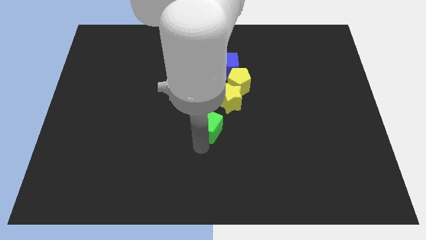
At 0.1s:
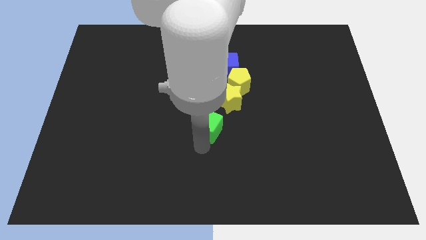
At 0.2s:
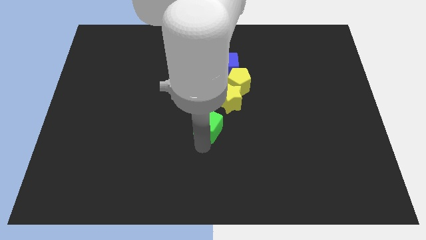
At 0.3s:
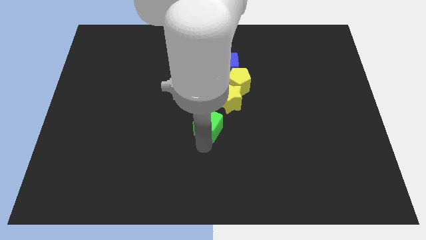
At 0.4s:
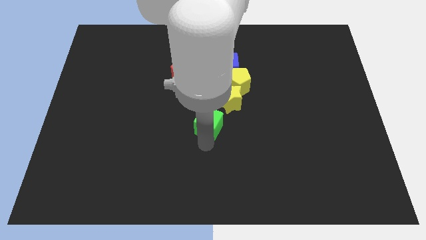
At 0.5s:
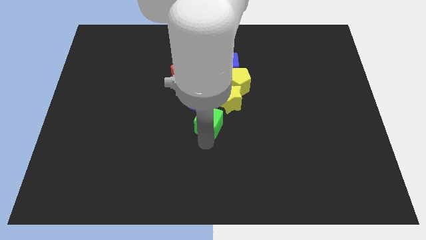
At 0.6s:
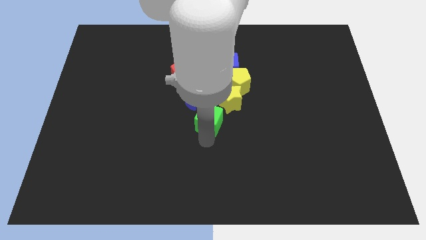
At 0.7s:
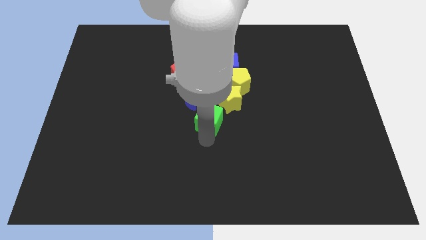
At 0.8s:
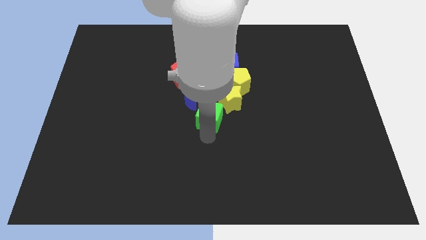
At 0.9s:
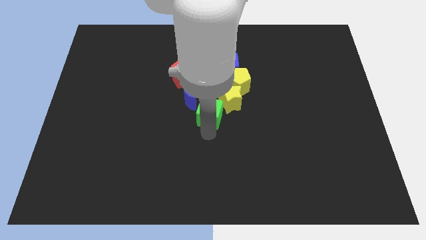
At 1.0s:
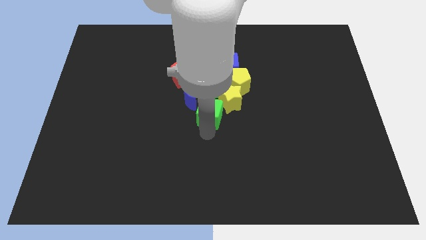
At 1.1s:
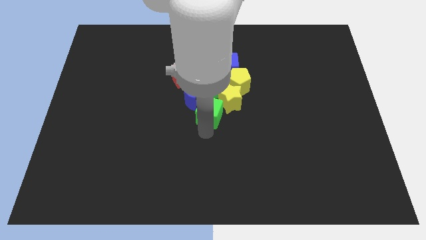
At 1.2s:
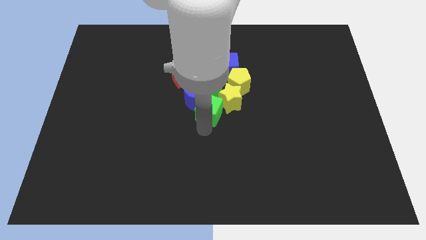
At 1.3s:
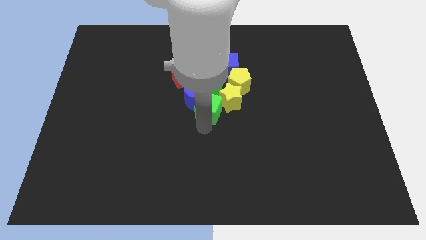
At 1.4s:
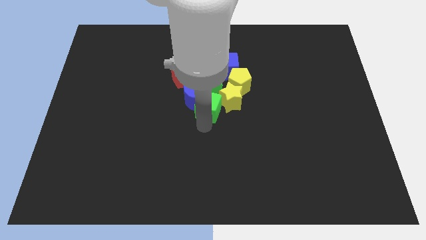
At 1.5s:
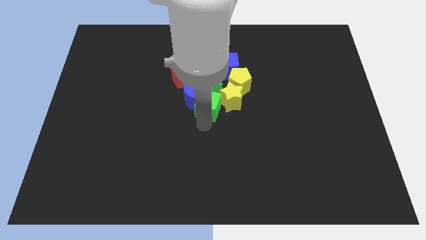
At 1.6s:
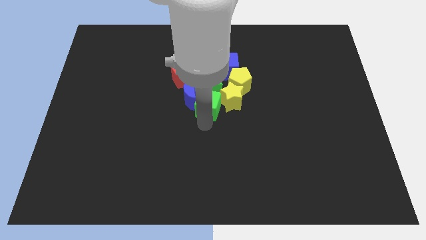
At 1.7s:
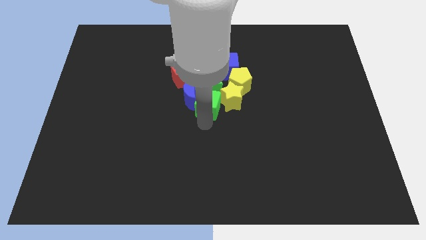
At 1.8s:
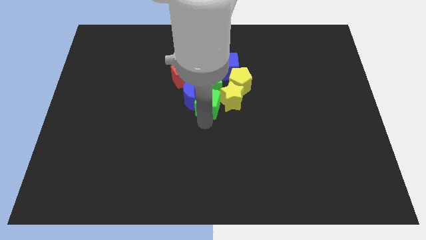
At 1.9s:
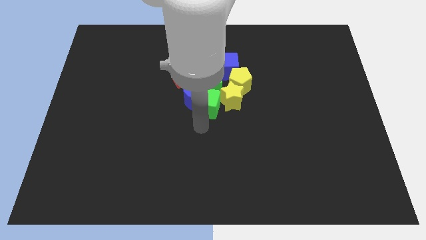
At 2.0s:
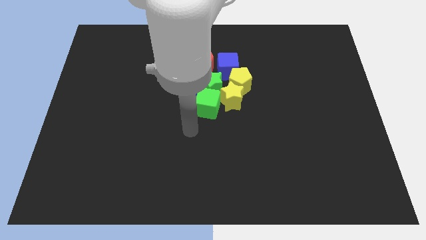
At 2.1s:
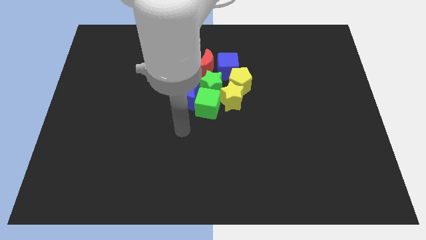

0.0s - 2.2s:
move the green cube into the bottom of the green star

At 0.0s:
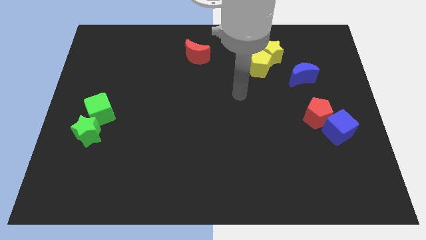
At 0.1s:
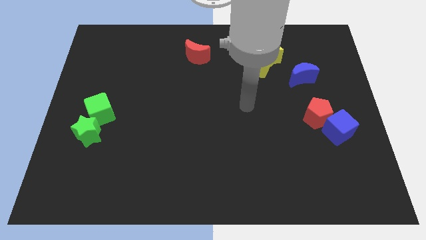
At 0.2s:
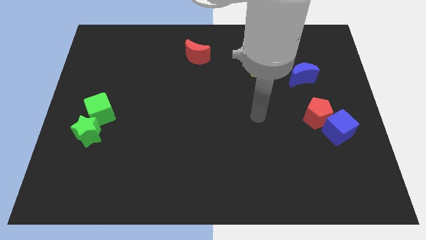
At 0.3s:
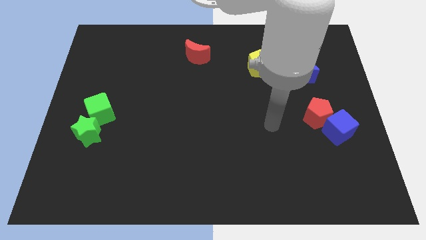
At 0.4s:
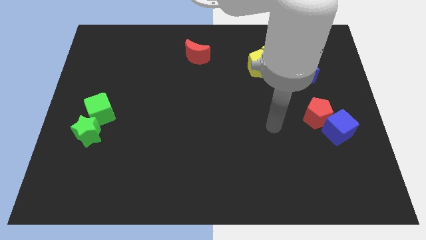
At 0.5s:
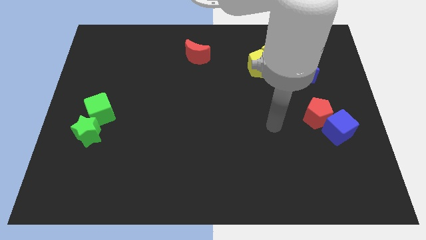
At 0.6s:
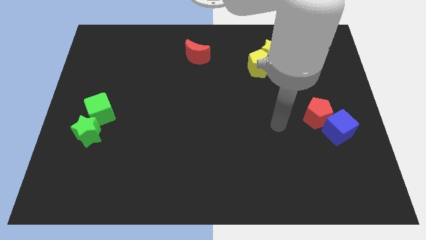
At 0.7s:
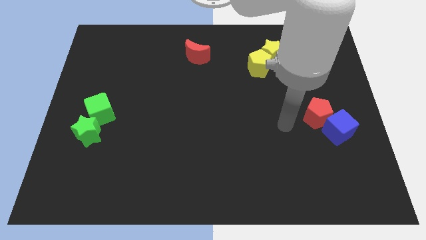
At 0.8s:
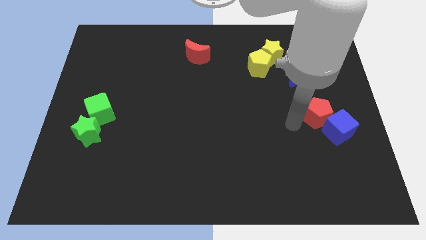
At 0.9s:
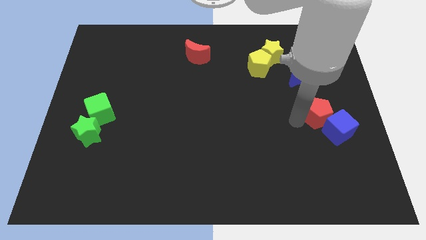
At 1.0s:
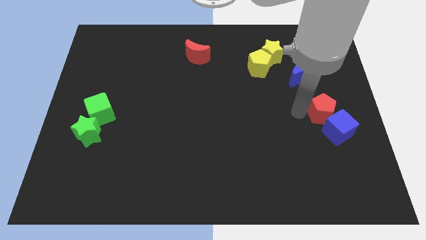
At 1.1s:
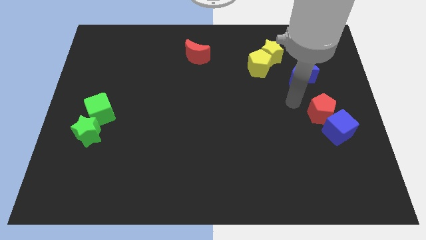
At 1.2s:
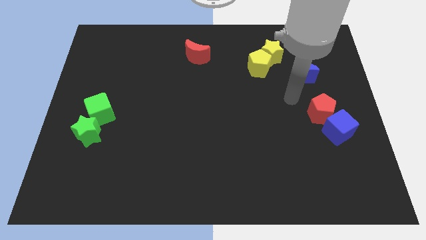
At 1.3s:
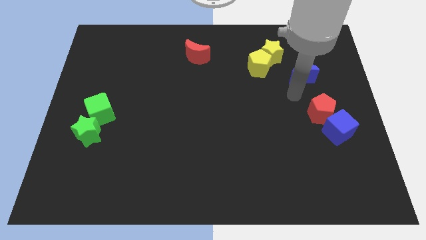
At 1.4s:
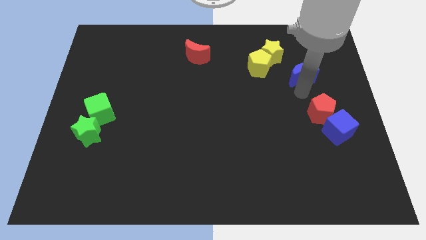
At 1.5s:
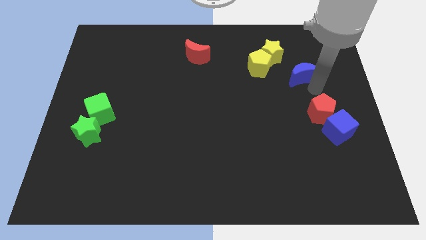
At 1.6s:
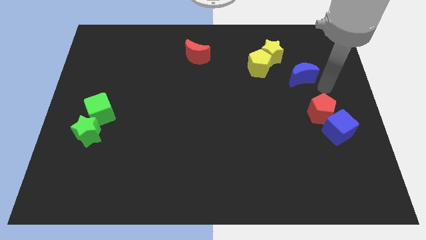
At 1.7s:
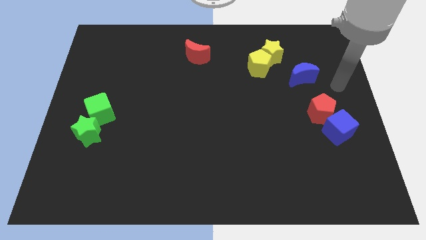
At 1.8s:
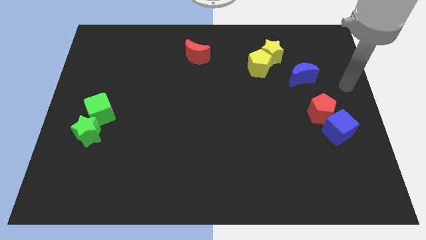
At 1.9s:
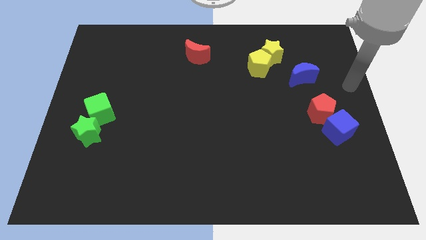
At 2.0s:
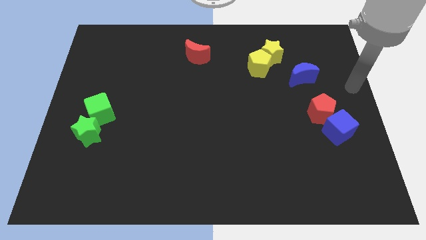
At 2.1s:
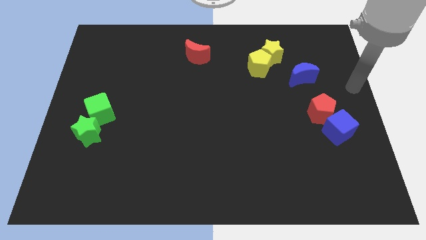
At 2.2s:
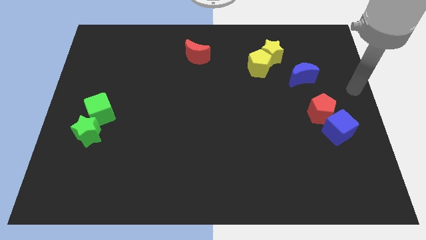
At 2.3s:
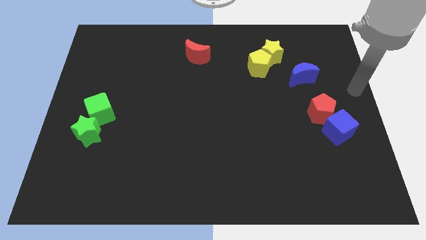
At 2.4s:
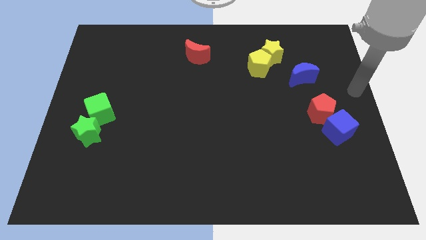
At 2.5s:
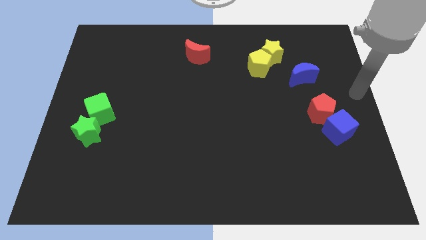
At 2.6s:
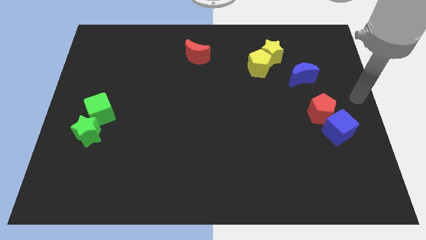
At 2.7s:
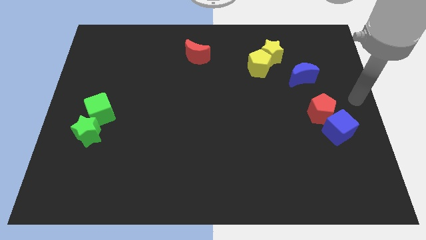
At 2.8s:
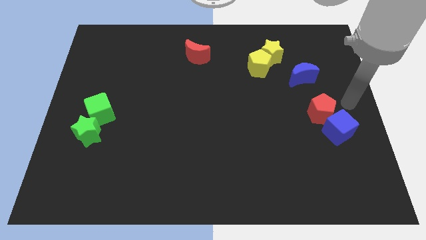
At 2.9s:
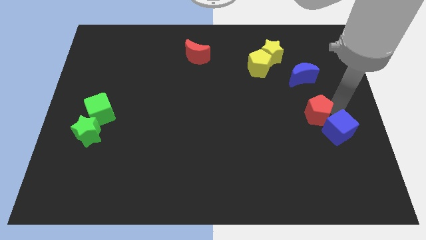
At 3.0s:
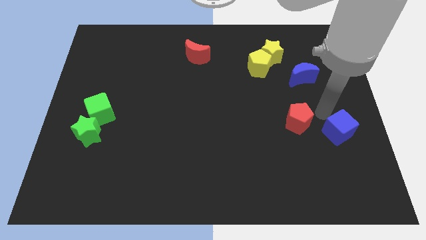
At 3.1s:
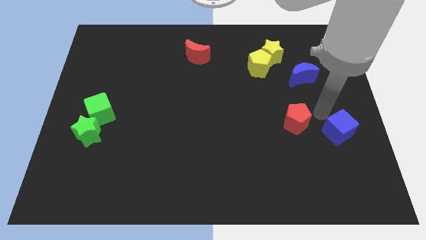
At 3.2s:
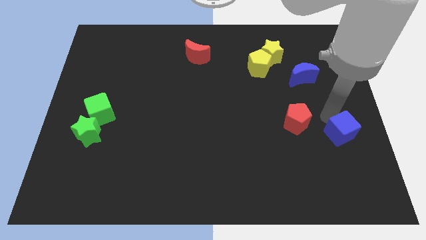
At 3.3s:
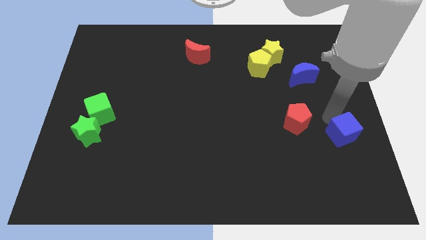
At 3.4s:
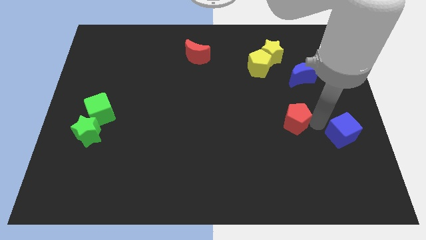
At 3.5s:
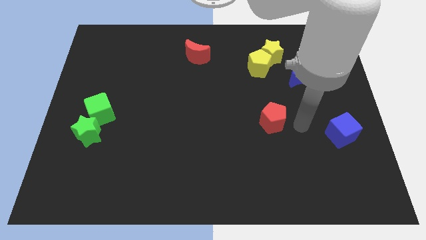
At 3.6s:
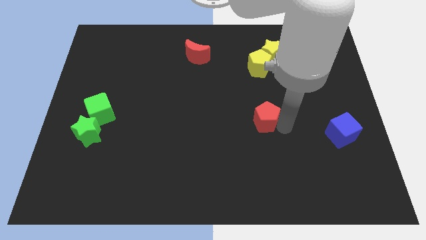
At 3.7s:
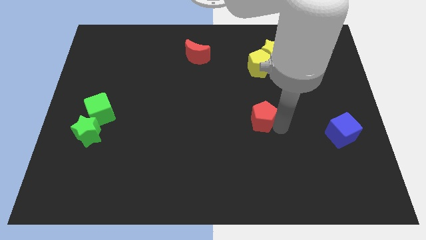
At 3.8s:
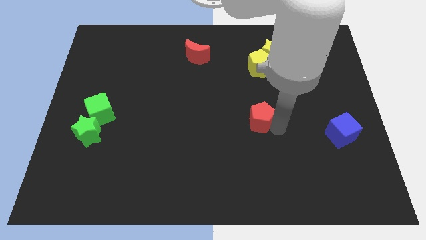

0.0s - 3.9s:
separate the red pentagon from the blue cube

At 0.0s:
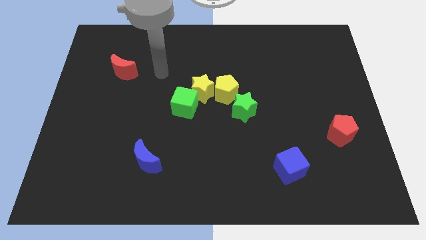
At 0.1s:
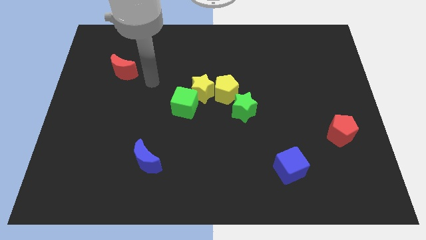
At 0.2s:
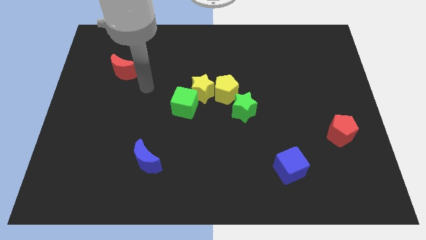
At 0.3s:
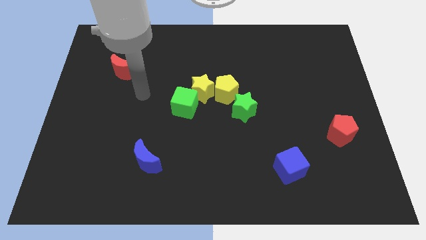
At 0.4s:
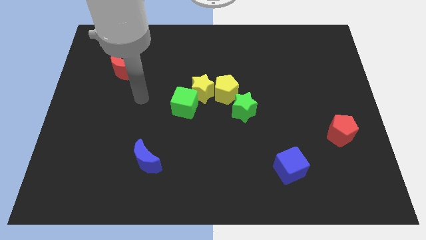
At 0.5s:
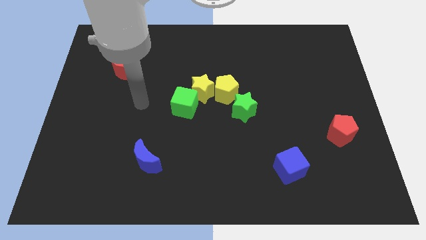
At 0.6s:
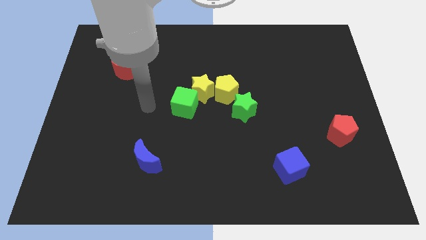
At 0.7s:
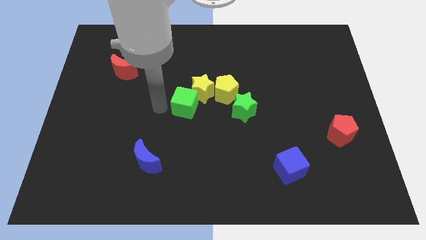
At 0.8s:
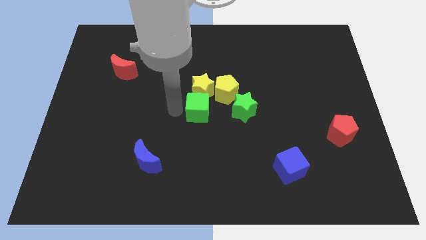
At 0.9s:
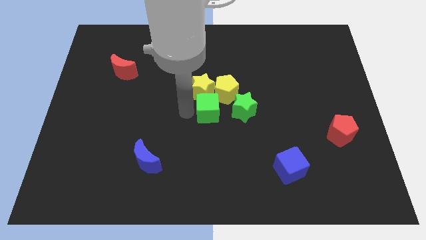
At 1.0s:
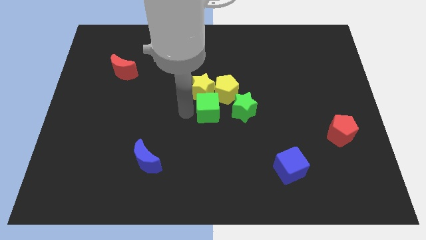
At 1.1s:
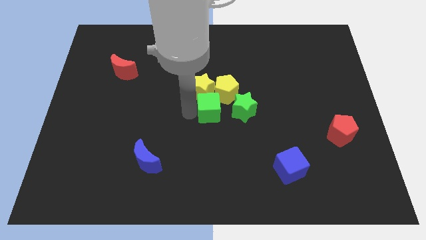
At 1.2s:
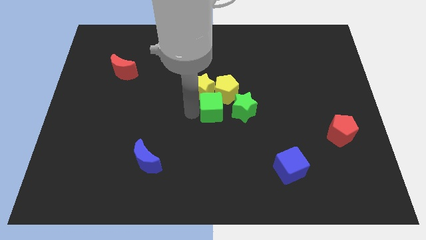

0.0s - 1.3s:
place the green cube below the yellow blocks

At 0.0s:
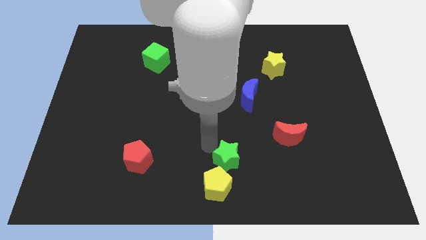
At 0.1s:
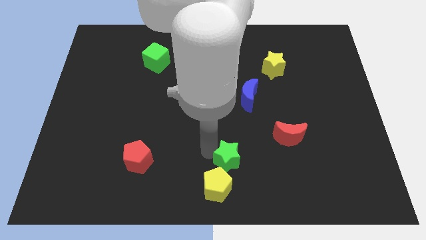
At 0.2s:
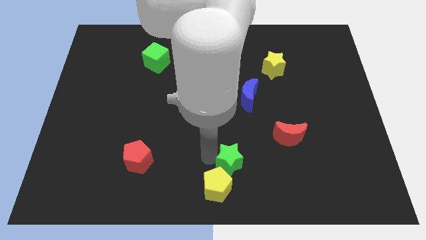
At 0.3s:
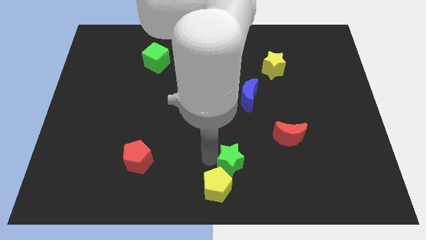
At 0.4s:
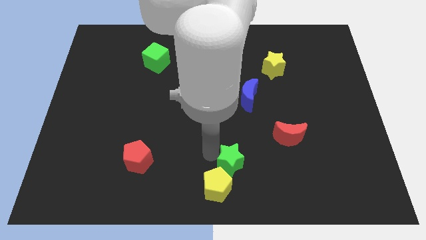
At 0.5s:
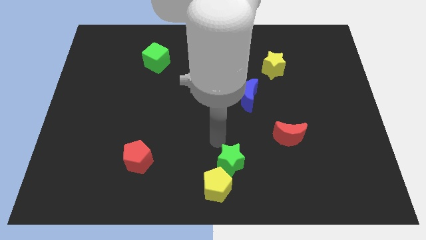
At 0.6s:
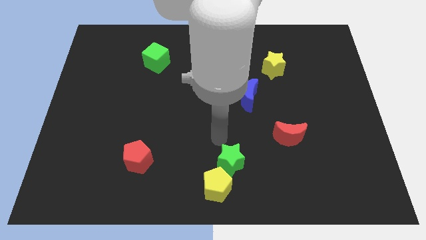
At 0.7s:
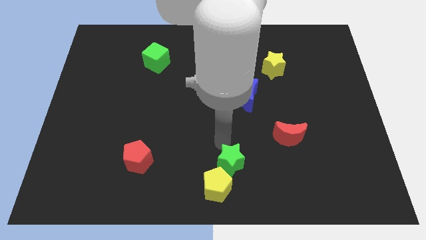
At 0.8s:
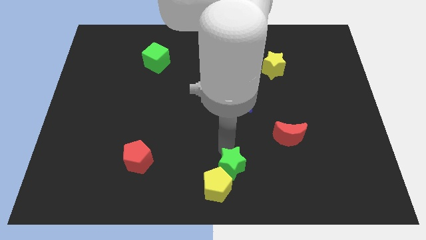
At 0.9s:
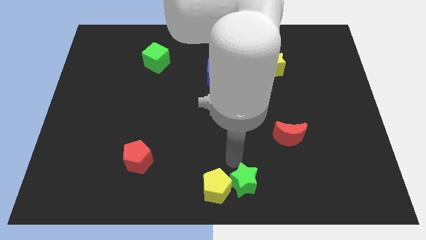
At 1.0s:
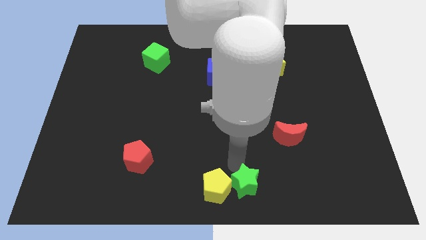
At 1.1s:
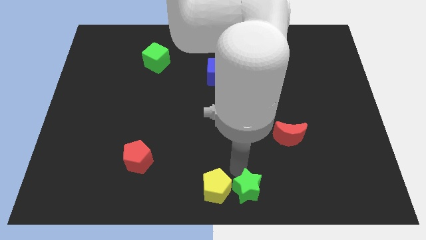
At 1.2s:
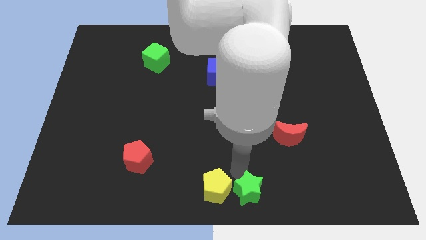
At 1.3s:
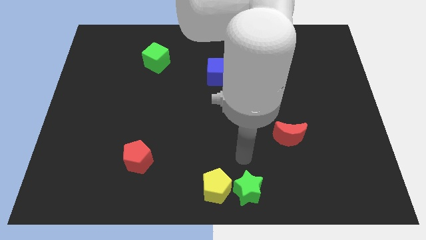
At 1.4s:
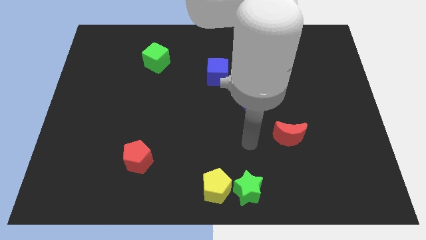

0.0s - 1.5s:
move the green star to the right side of the yellow pentagon
